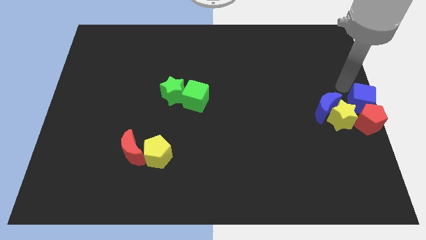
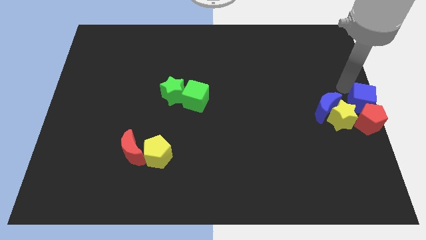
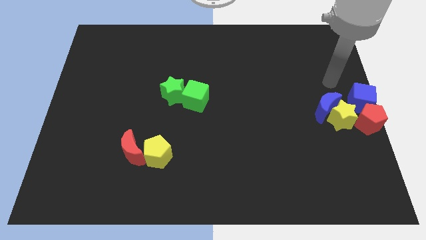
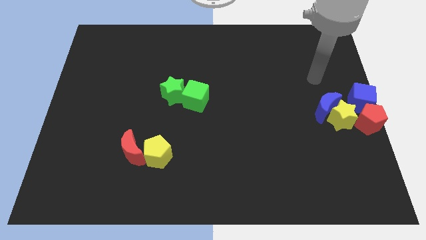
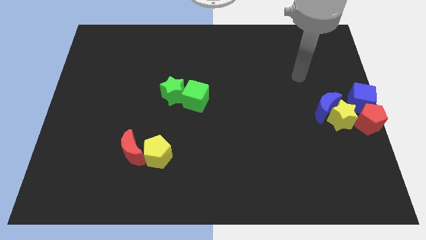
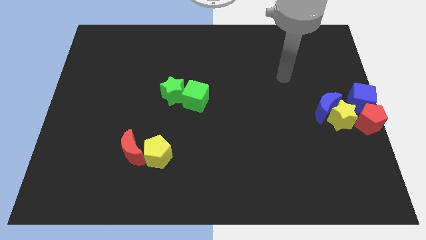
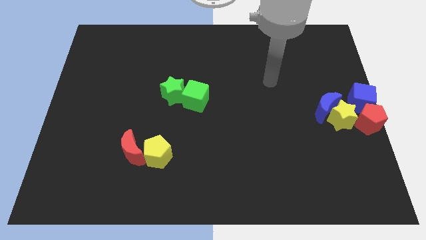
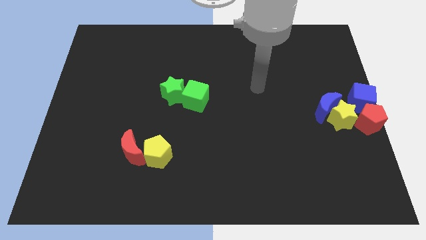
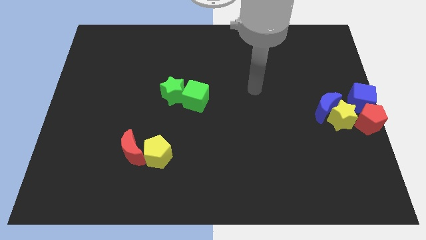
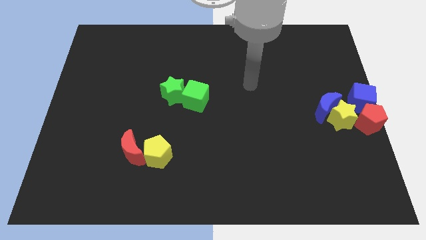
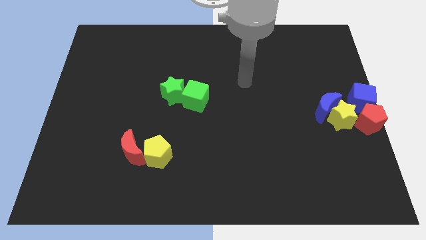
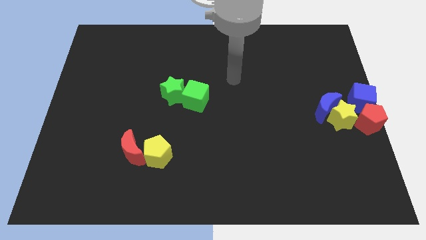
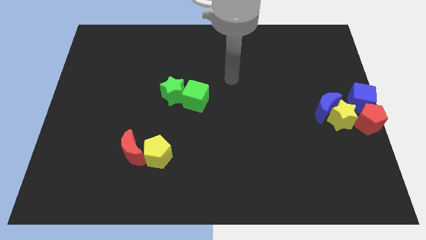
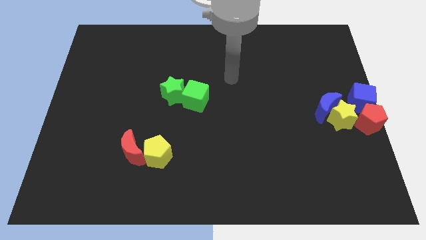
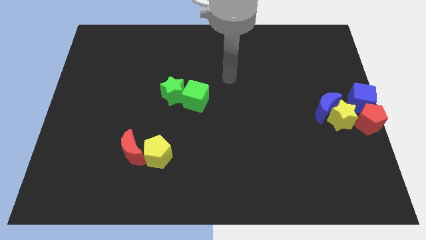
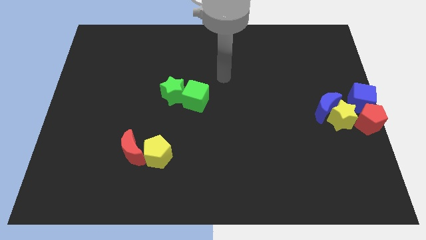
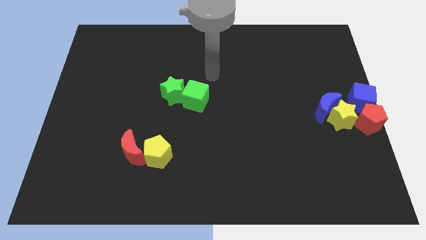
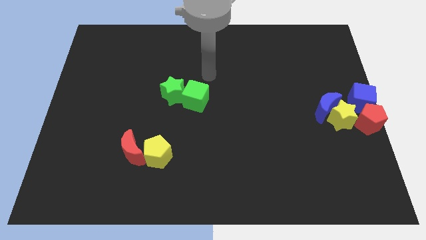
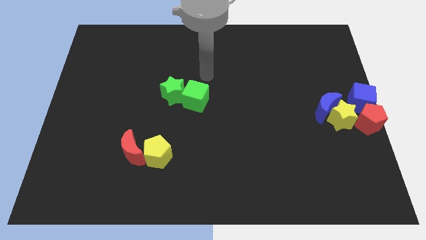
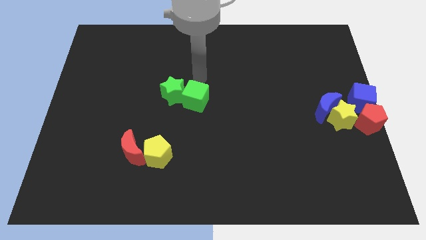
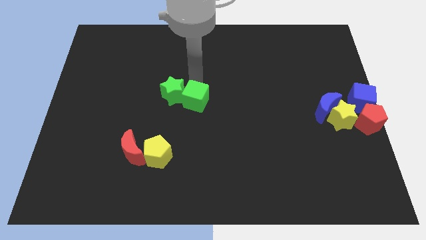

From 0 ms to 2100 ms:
place your arm to the top of green cube

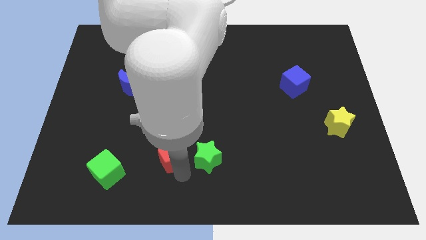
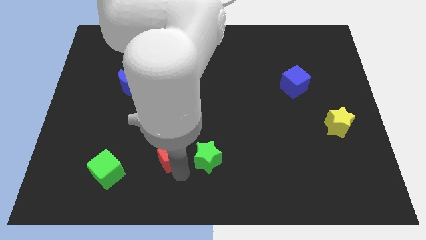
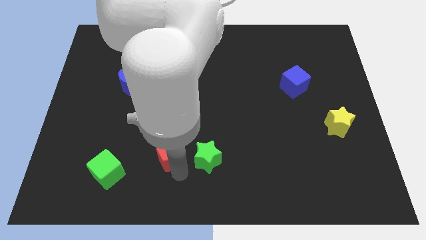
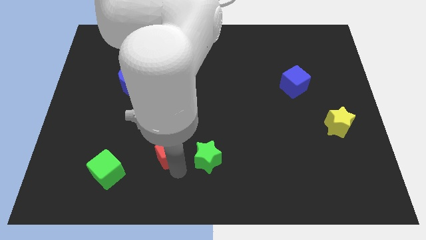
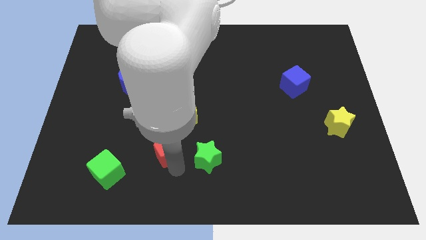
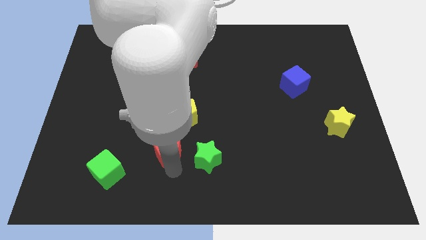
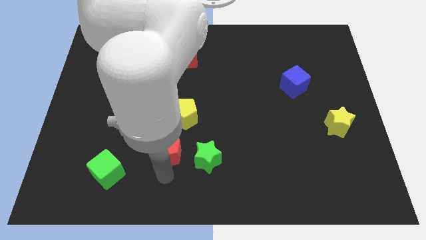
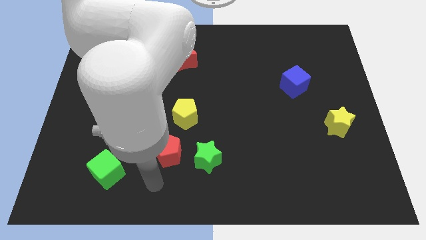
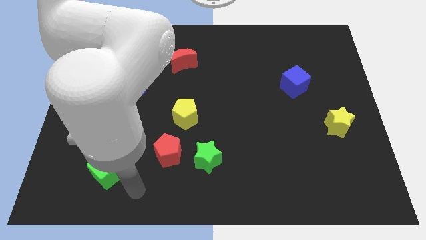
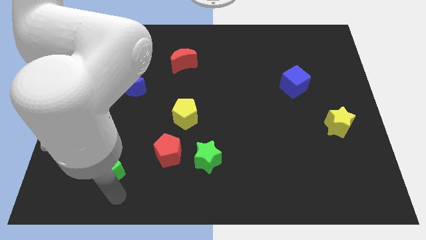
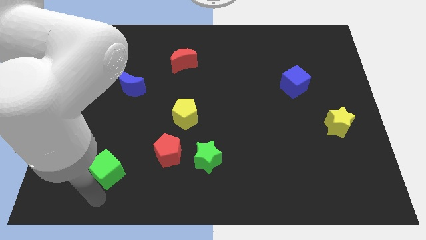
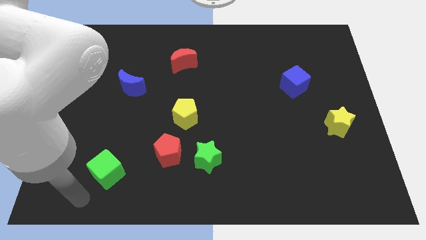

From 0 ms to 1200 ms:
slightly push the red pentagon towards up

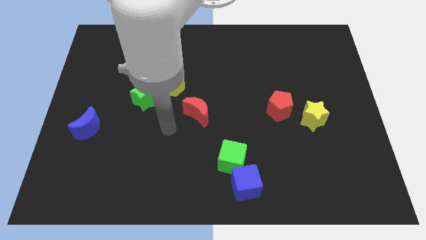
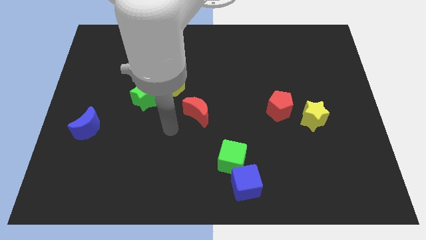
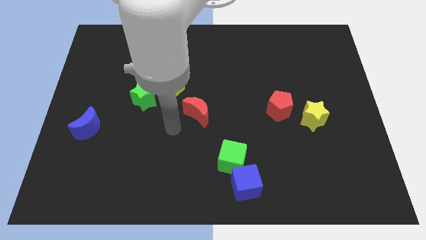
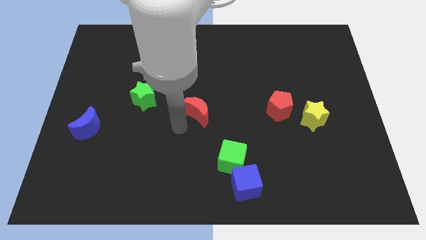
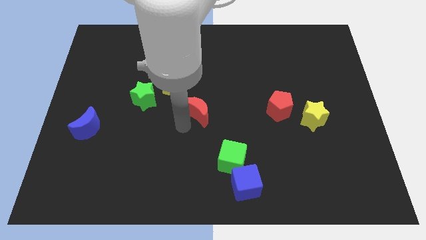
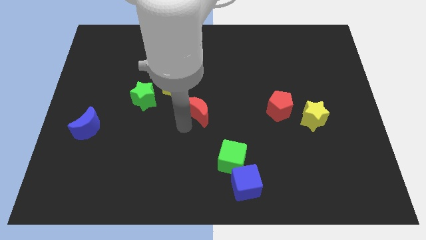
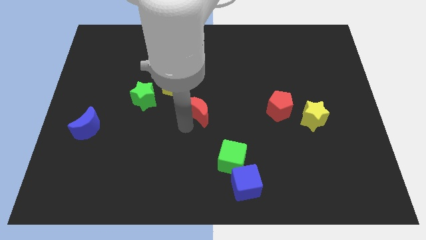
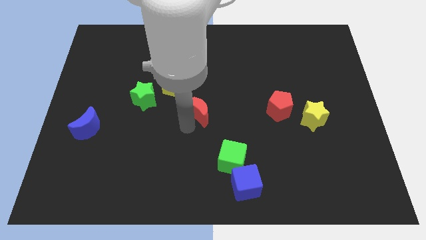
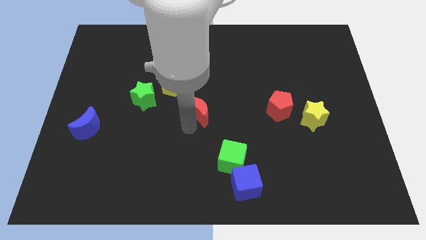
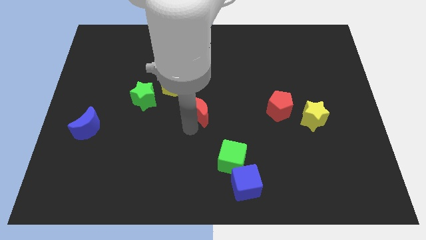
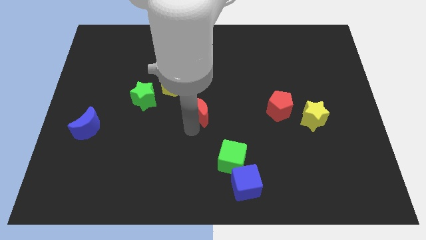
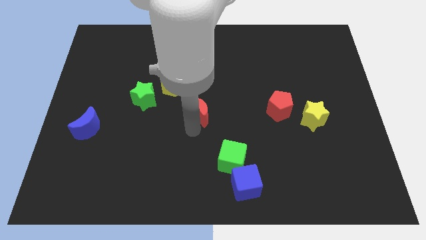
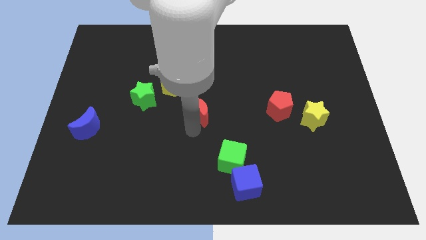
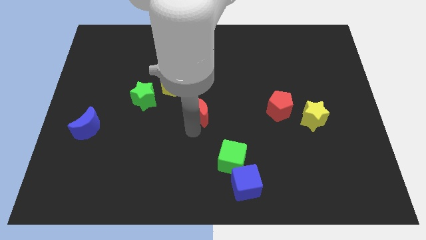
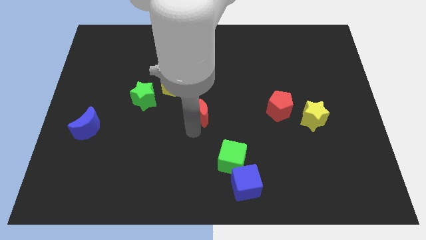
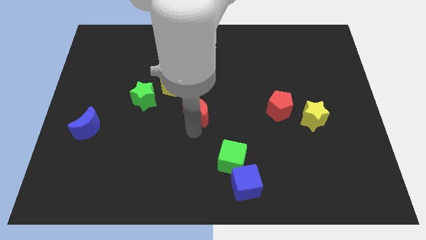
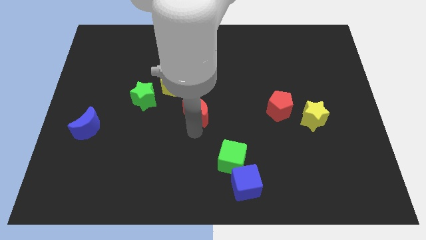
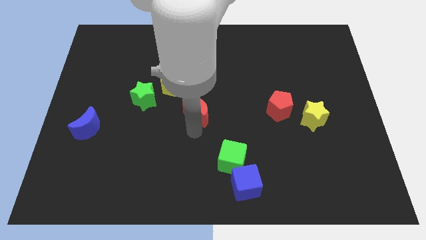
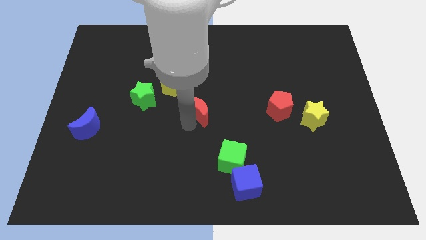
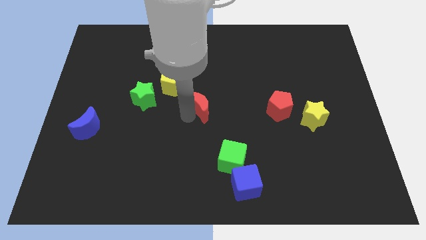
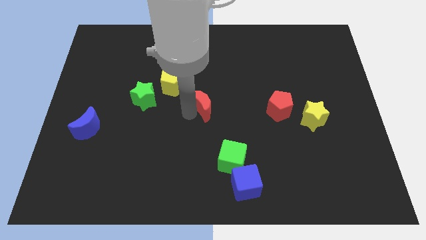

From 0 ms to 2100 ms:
move the arm towards the red crescent

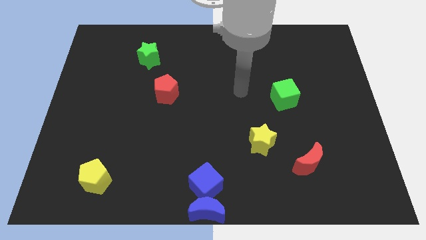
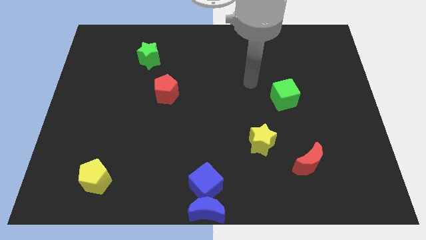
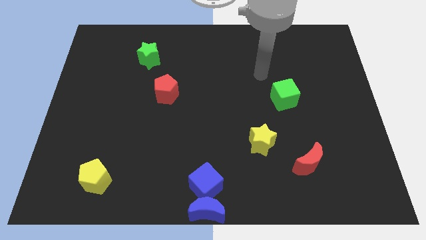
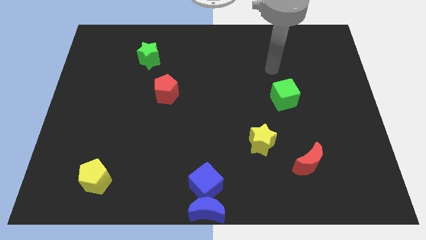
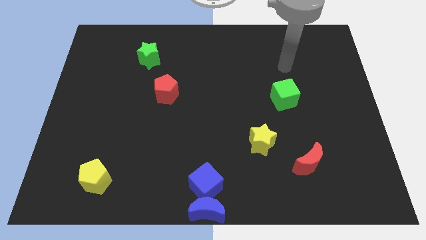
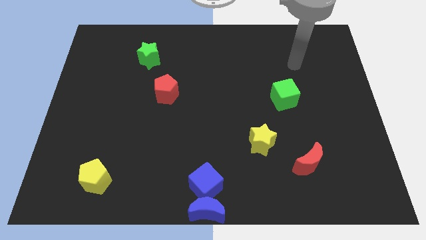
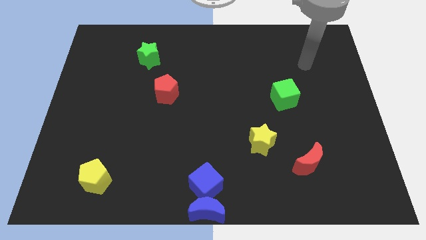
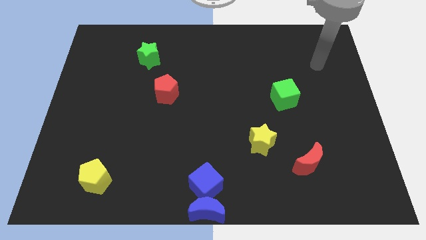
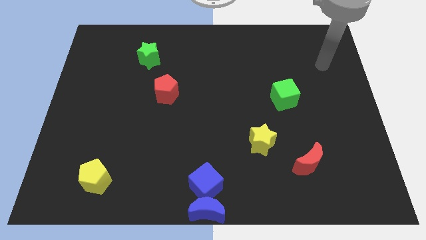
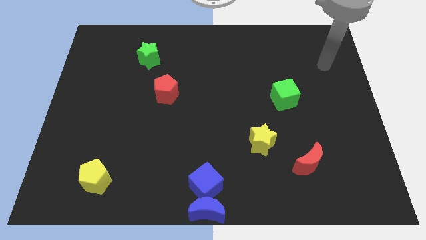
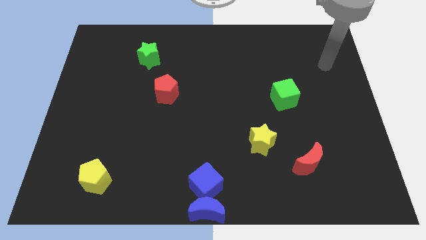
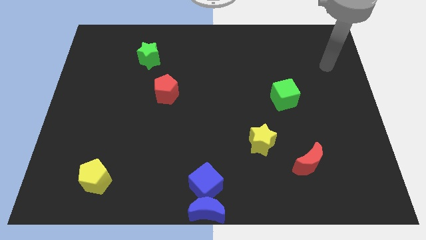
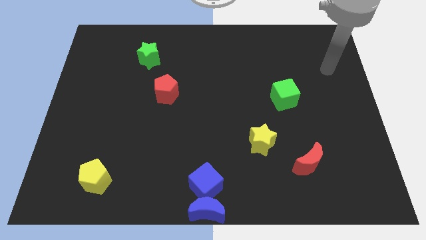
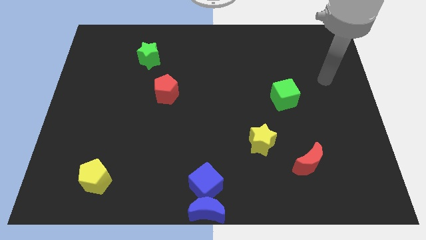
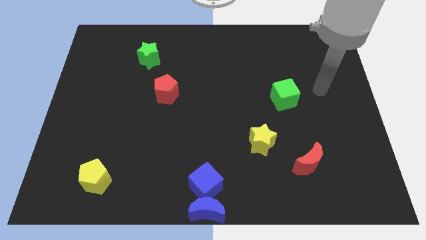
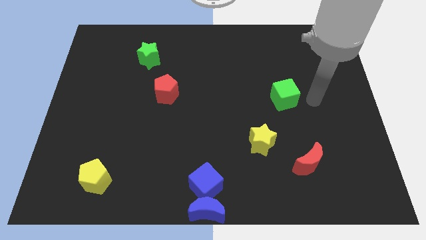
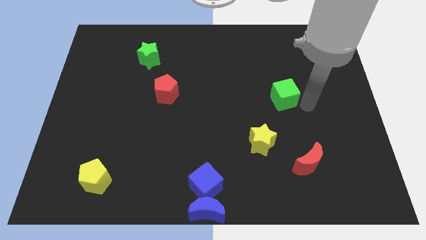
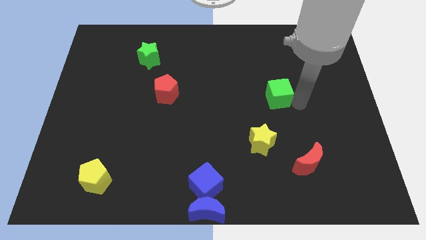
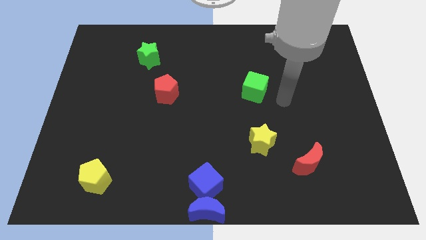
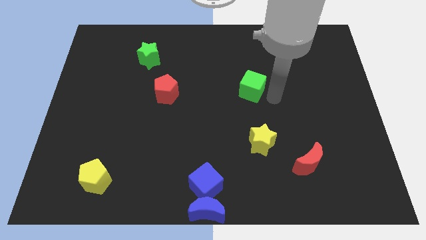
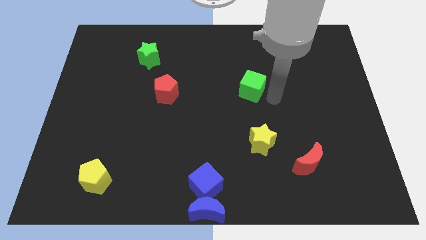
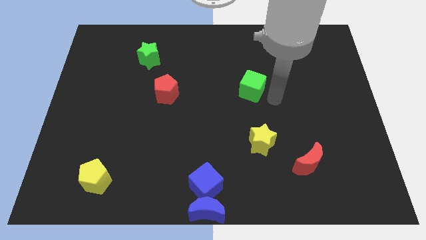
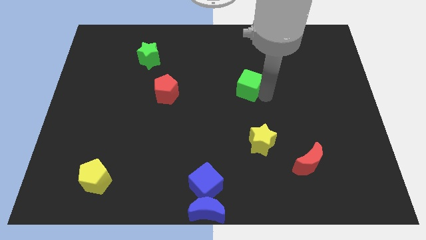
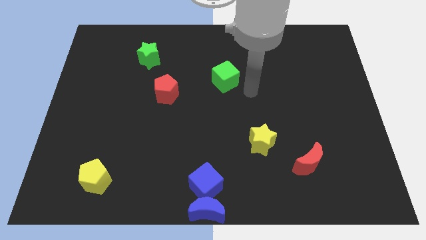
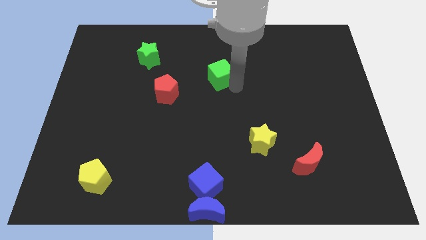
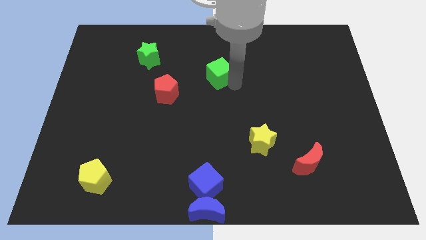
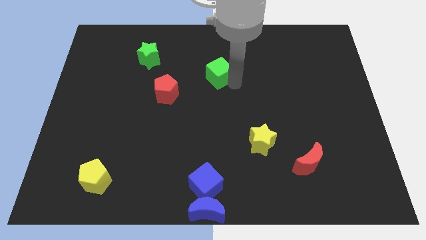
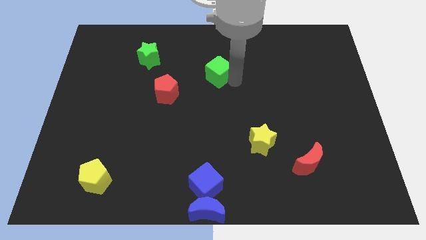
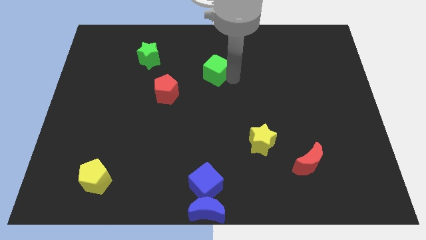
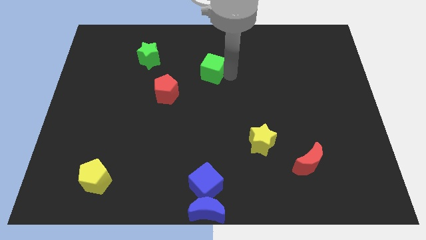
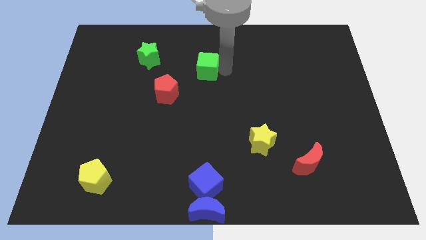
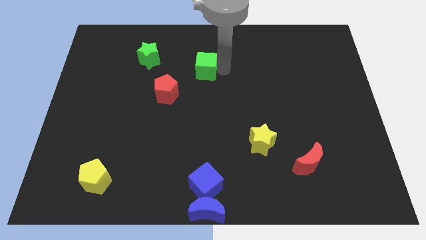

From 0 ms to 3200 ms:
push the green cube to the top right of the red pentagon

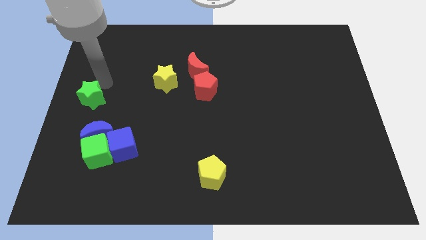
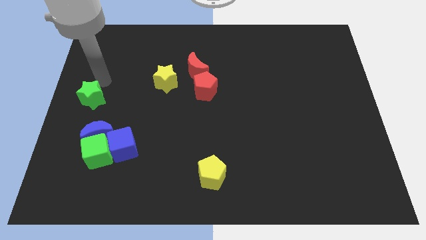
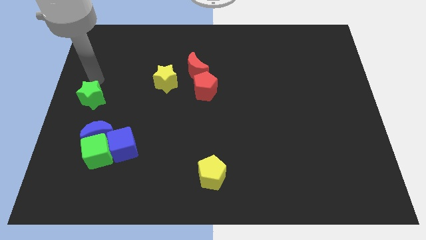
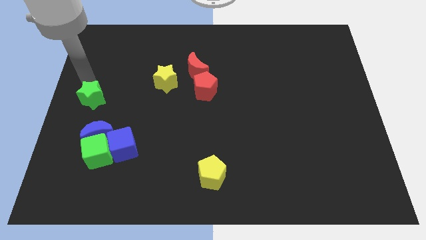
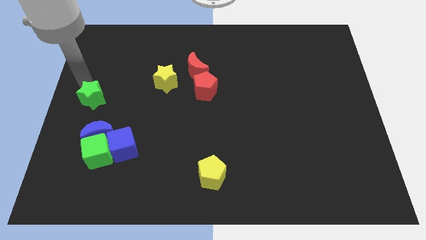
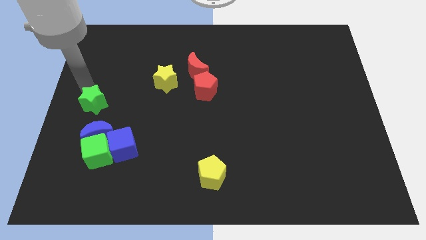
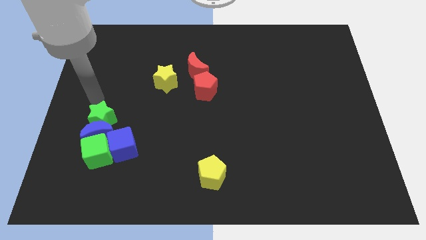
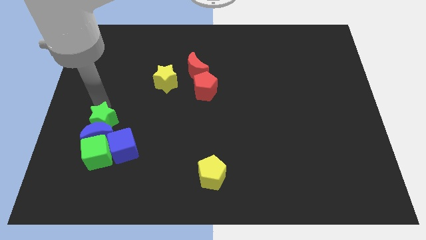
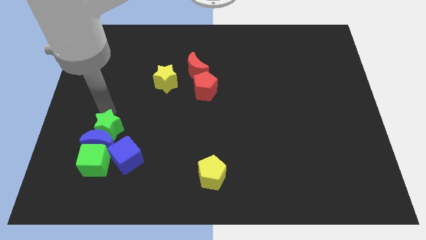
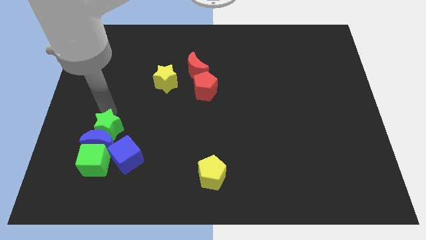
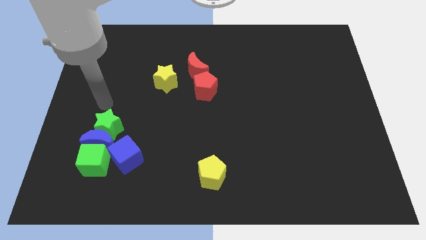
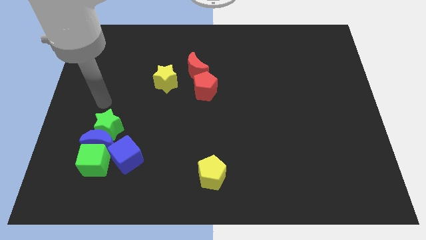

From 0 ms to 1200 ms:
push the green star into blue moon
